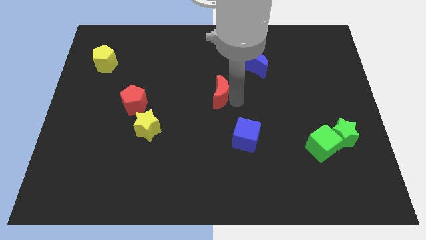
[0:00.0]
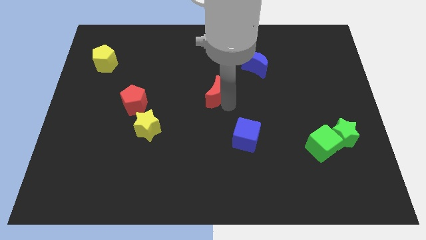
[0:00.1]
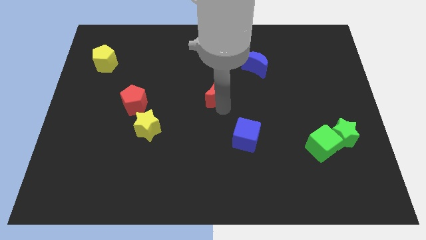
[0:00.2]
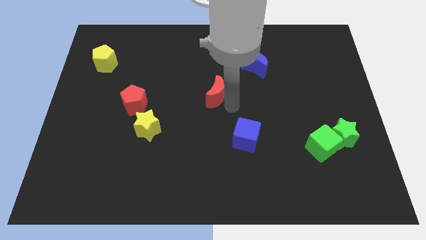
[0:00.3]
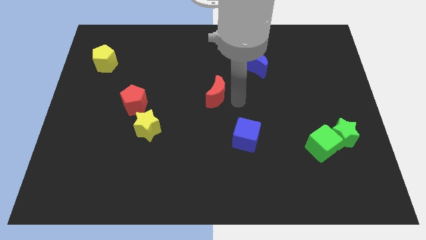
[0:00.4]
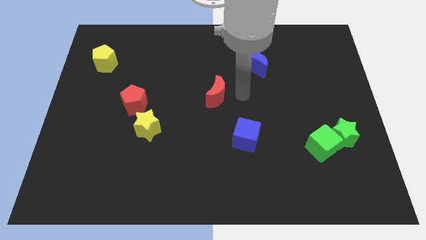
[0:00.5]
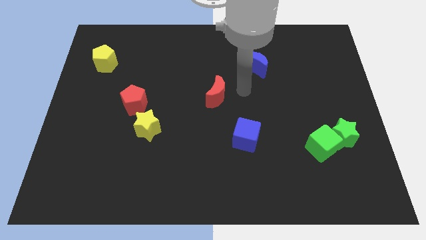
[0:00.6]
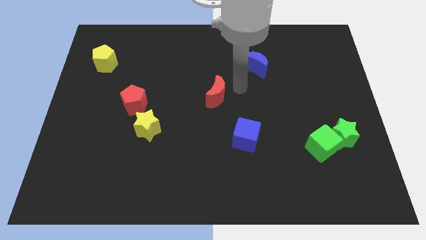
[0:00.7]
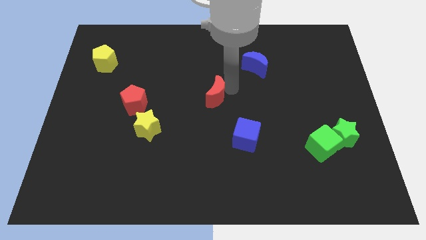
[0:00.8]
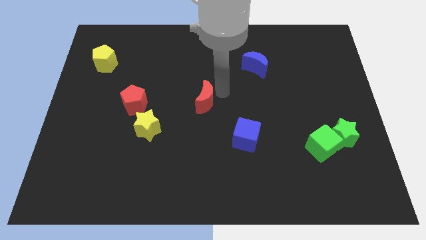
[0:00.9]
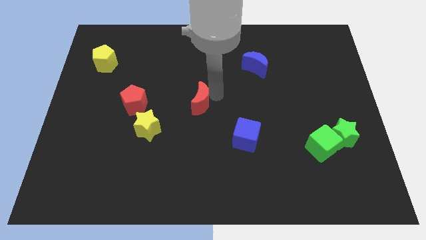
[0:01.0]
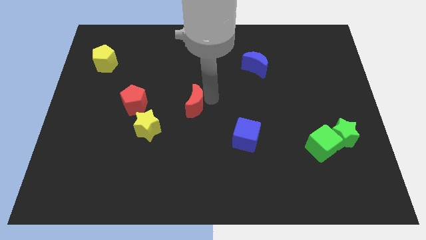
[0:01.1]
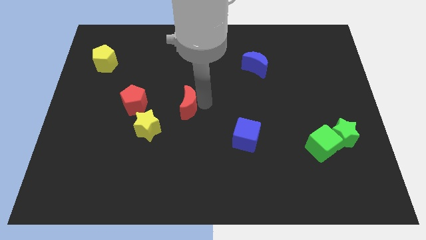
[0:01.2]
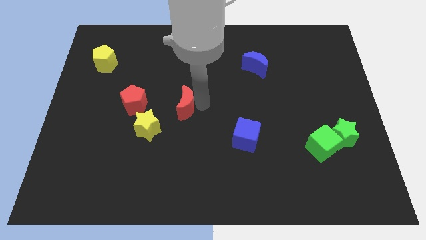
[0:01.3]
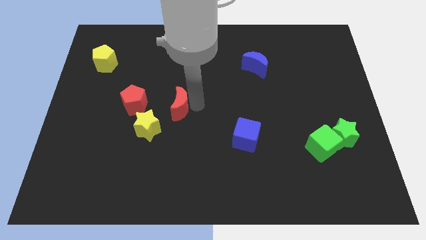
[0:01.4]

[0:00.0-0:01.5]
move the red pentagon to right side of the yellow star

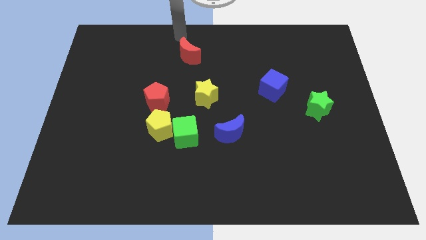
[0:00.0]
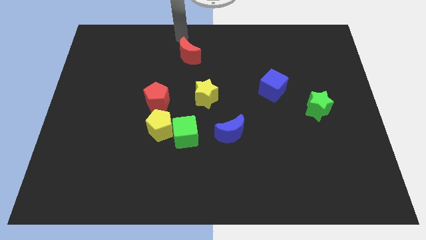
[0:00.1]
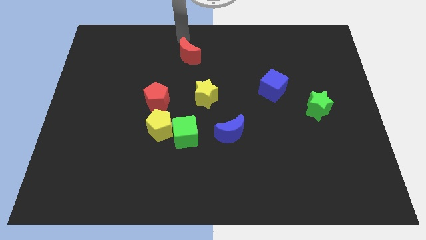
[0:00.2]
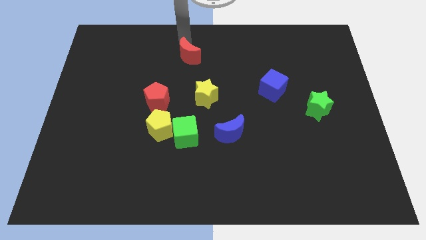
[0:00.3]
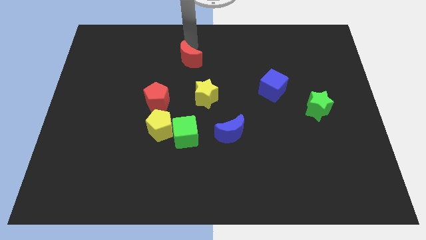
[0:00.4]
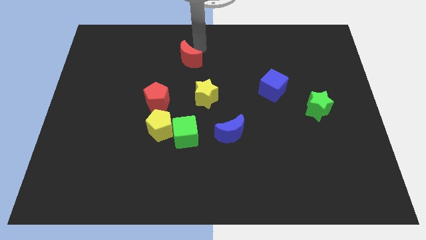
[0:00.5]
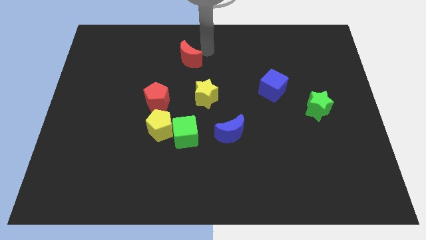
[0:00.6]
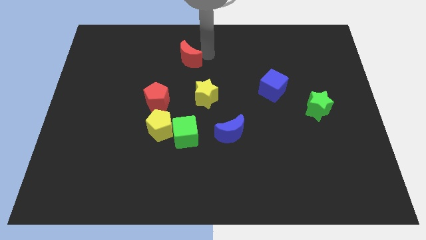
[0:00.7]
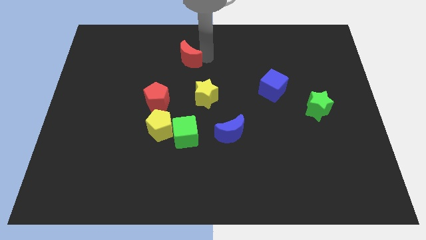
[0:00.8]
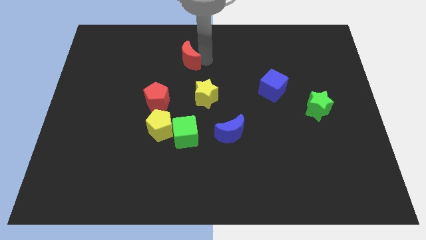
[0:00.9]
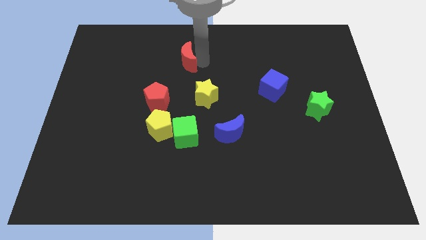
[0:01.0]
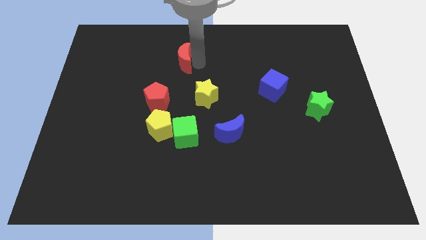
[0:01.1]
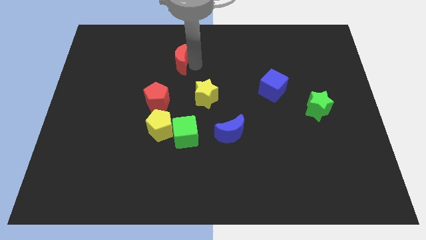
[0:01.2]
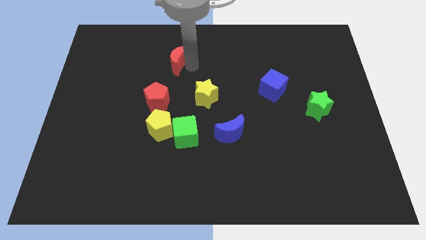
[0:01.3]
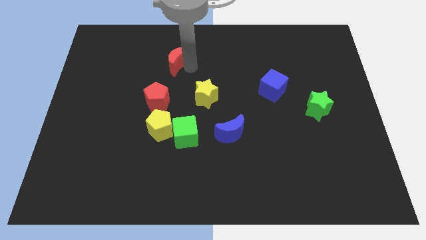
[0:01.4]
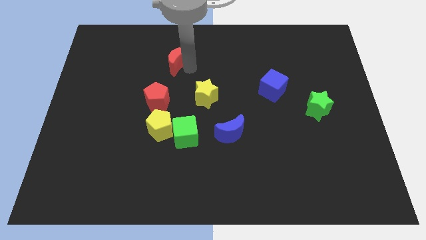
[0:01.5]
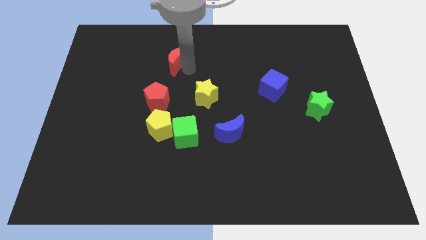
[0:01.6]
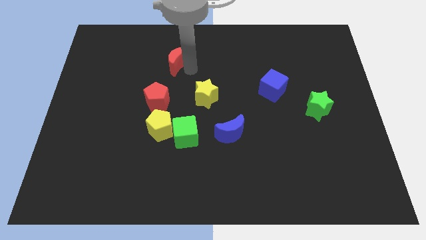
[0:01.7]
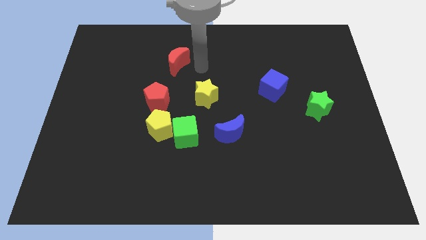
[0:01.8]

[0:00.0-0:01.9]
slightly push the red crescent

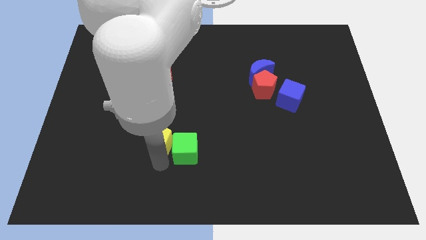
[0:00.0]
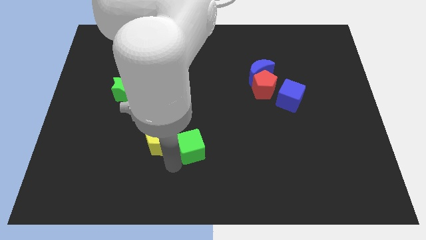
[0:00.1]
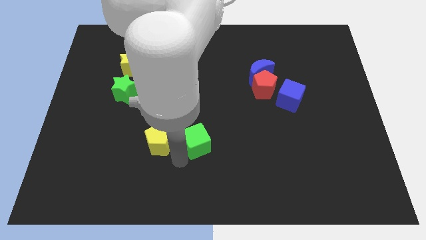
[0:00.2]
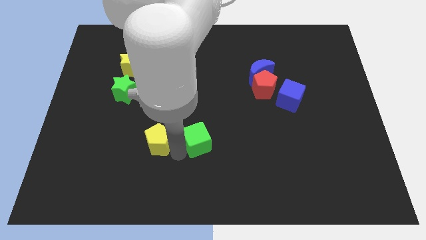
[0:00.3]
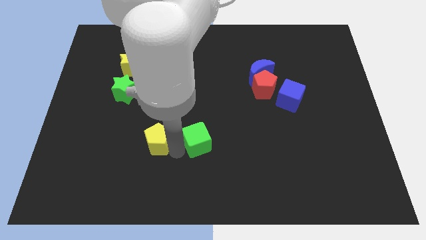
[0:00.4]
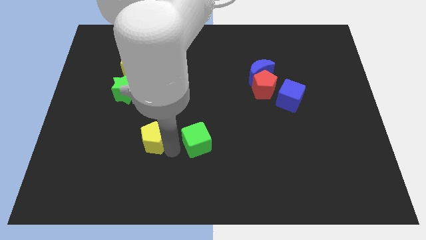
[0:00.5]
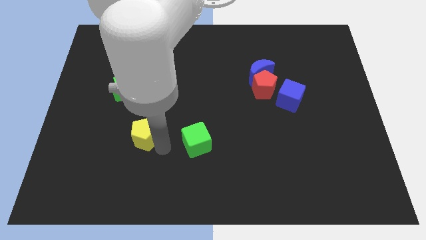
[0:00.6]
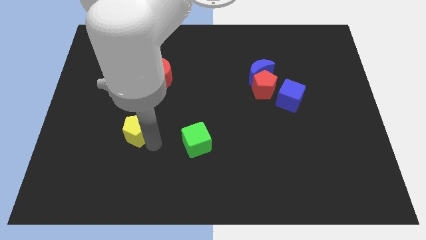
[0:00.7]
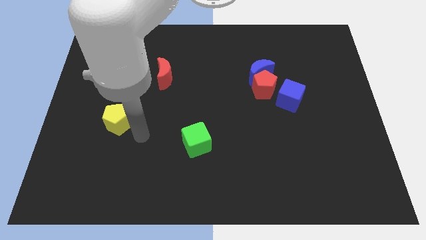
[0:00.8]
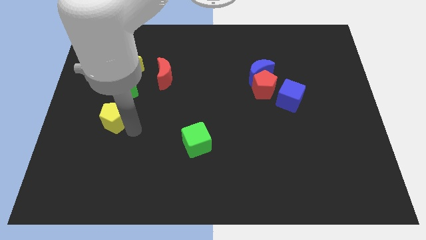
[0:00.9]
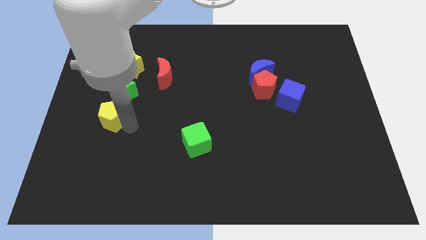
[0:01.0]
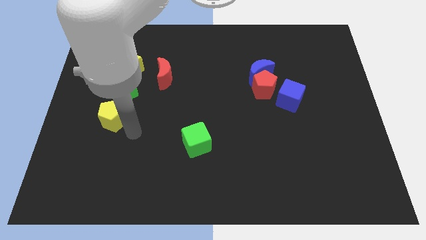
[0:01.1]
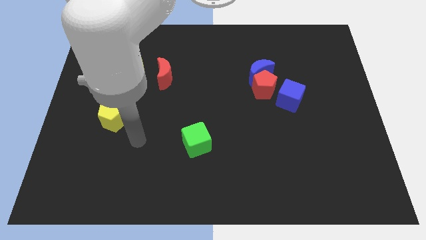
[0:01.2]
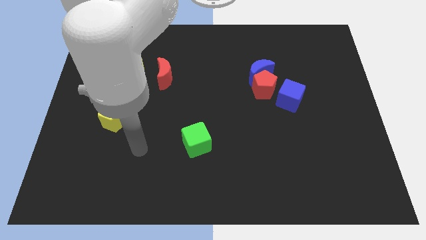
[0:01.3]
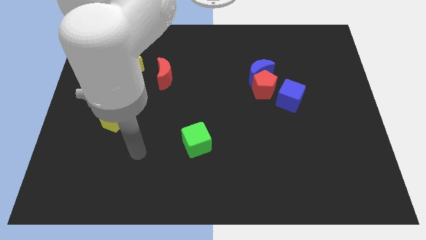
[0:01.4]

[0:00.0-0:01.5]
push the yellow pentagon below the green star

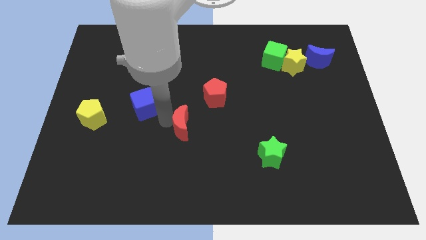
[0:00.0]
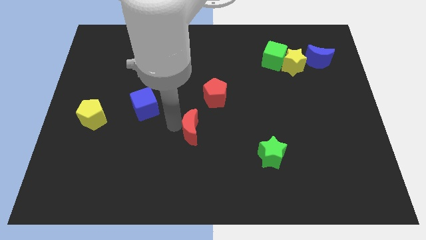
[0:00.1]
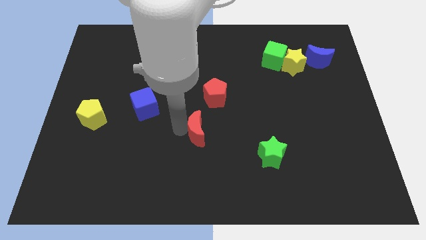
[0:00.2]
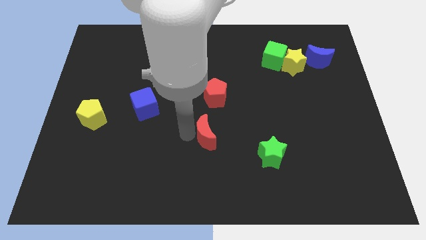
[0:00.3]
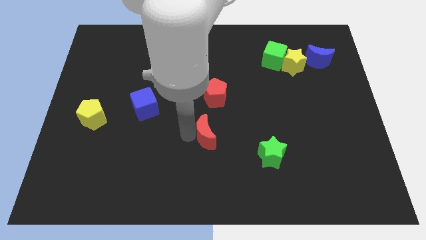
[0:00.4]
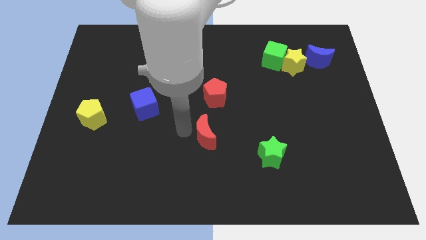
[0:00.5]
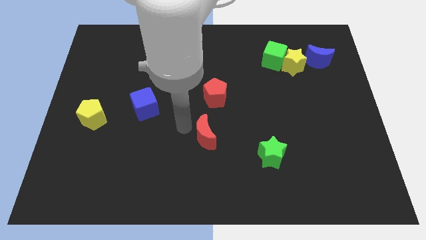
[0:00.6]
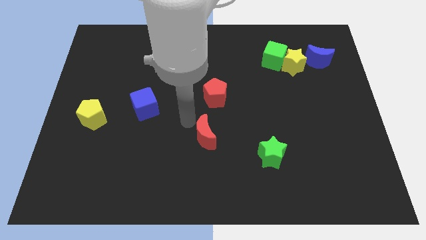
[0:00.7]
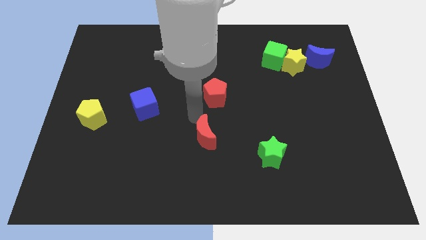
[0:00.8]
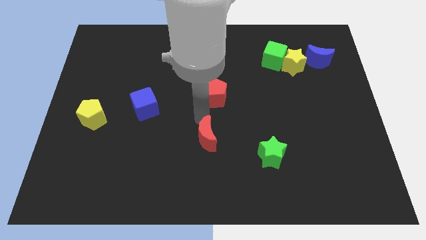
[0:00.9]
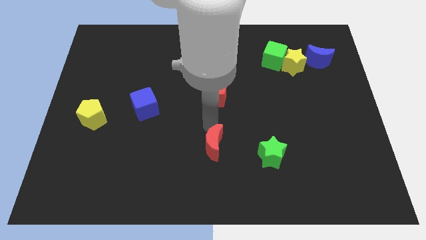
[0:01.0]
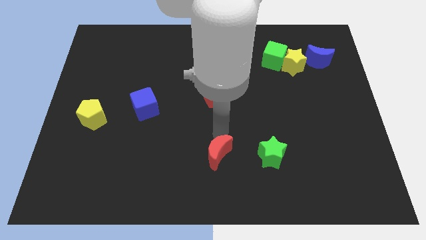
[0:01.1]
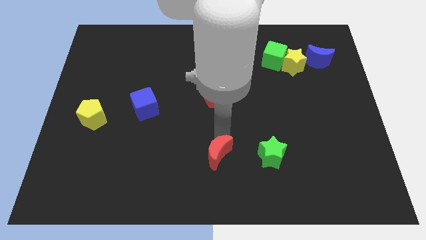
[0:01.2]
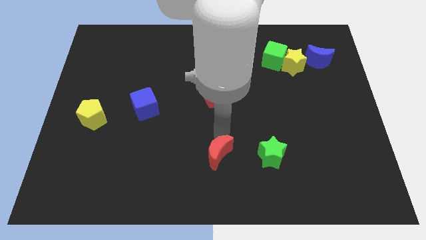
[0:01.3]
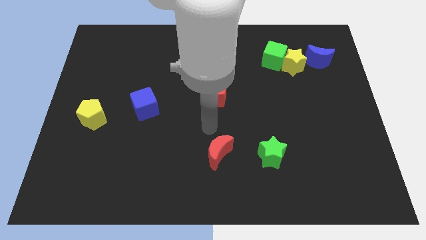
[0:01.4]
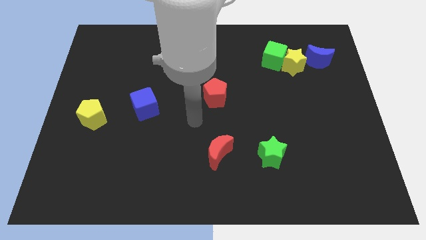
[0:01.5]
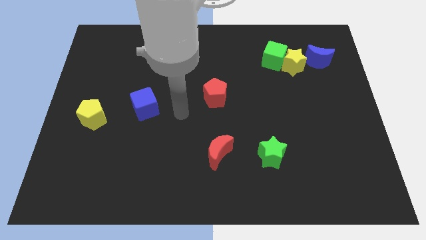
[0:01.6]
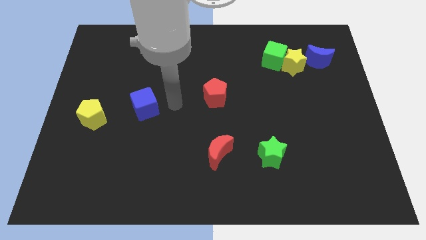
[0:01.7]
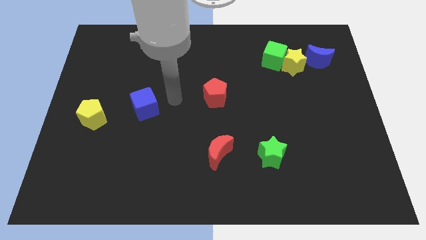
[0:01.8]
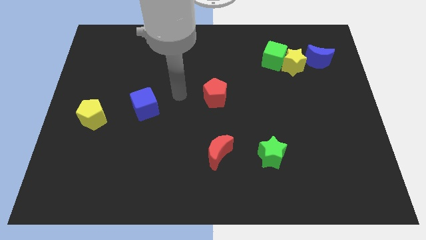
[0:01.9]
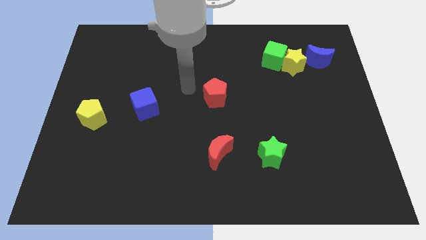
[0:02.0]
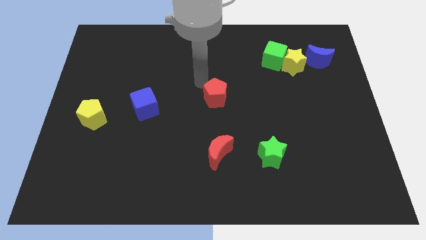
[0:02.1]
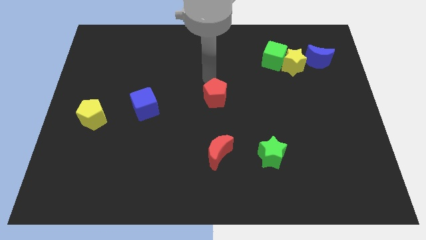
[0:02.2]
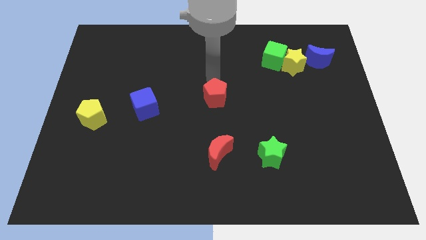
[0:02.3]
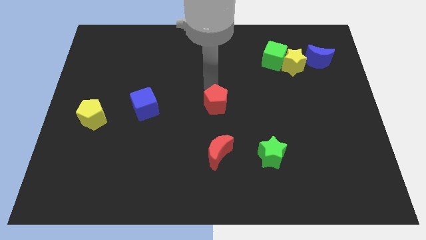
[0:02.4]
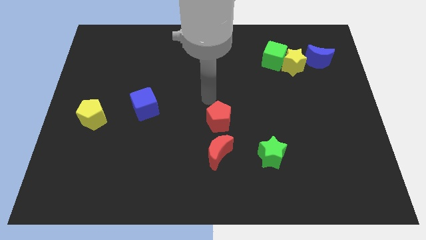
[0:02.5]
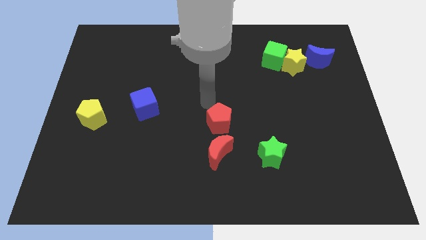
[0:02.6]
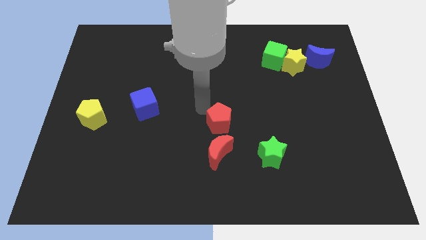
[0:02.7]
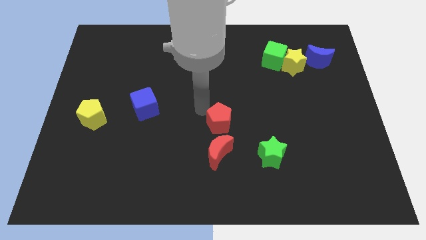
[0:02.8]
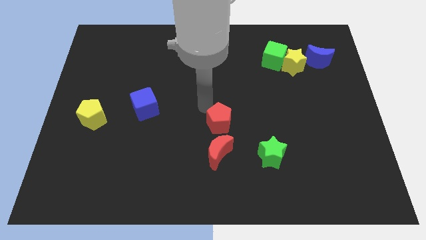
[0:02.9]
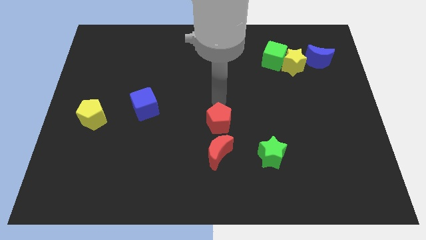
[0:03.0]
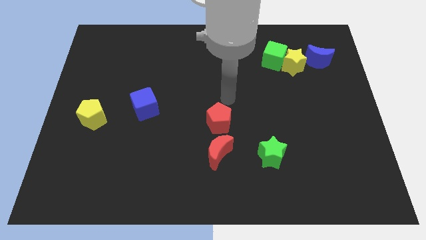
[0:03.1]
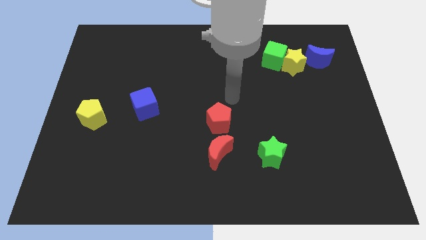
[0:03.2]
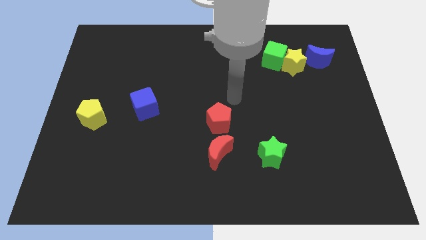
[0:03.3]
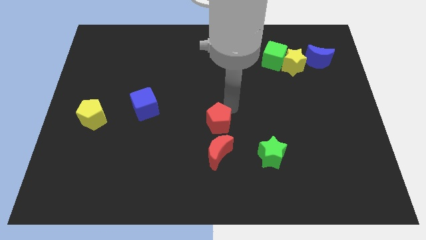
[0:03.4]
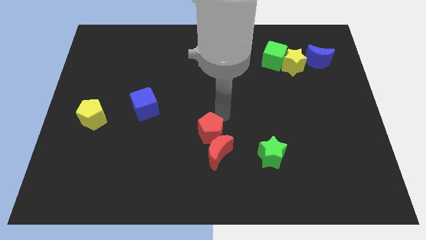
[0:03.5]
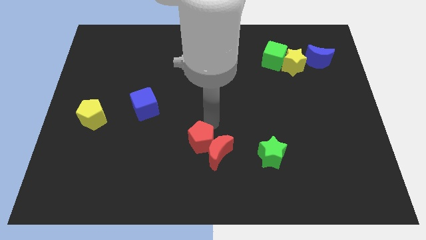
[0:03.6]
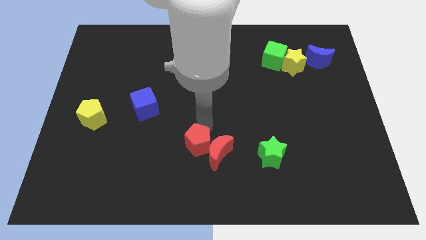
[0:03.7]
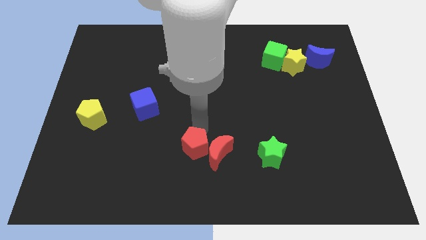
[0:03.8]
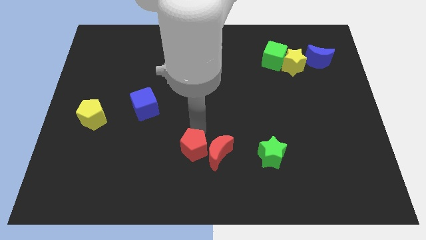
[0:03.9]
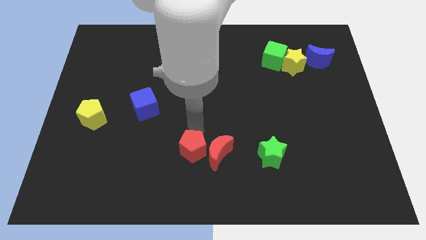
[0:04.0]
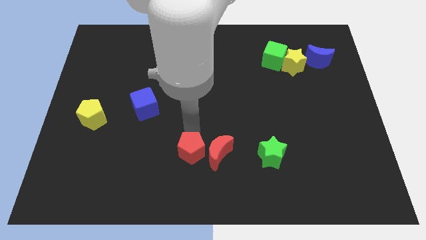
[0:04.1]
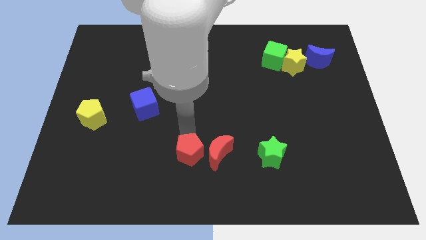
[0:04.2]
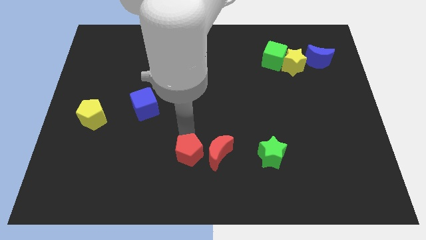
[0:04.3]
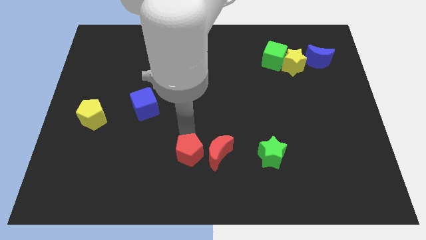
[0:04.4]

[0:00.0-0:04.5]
put the red blocks to the left side of the green star
